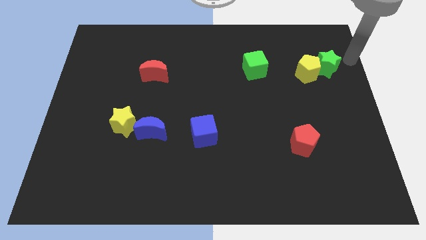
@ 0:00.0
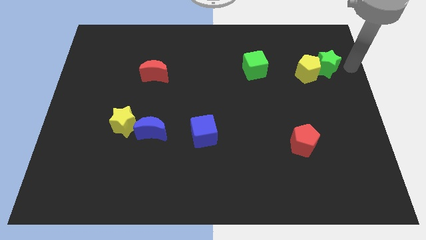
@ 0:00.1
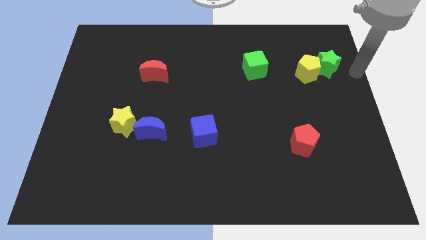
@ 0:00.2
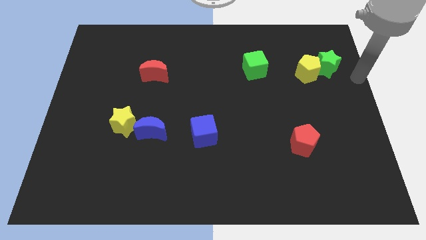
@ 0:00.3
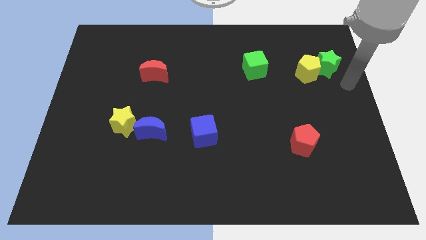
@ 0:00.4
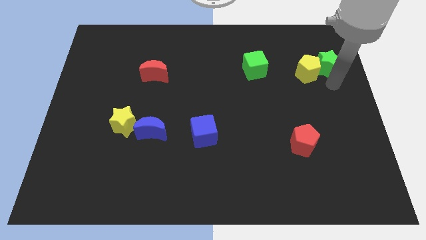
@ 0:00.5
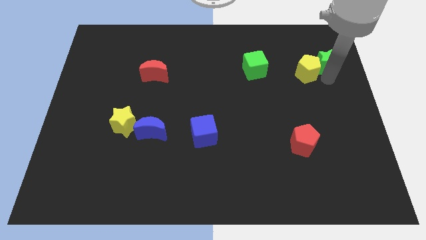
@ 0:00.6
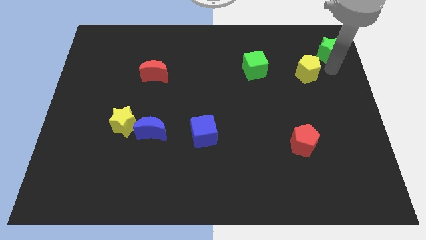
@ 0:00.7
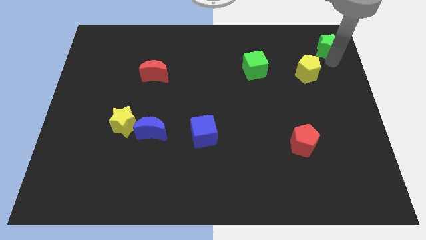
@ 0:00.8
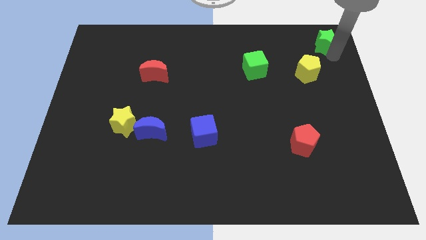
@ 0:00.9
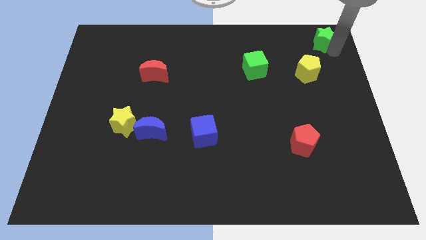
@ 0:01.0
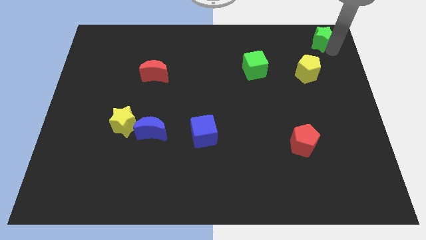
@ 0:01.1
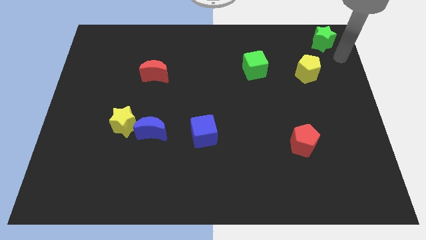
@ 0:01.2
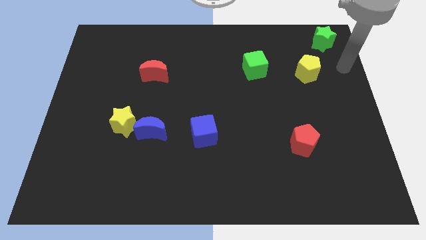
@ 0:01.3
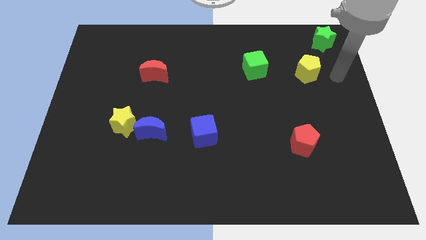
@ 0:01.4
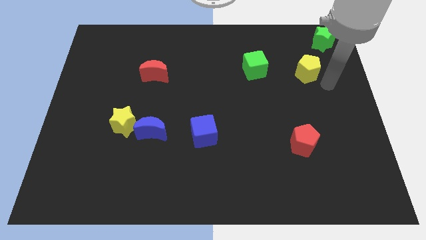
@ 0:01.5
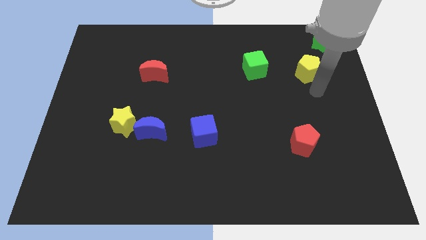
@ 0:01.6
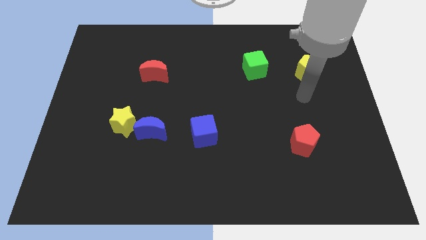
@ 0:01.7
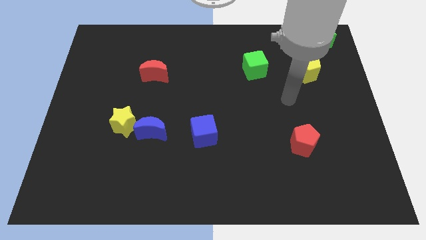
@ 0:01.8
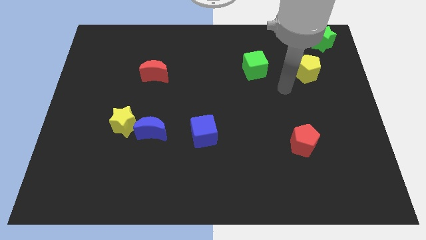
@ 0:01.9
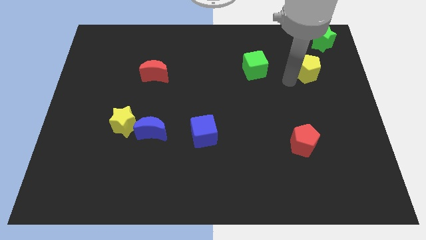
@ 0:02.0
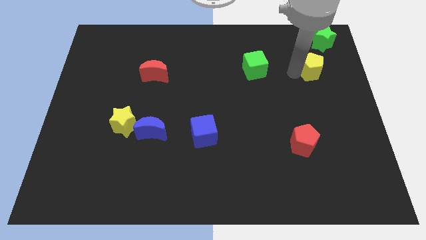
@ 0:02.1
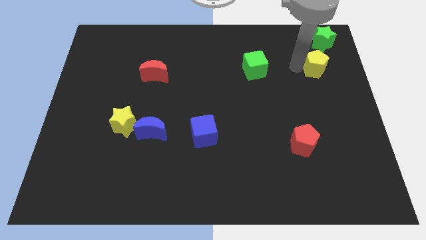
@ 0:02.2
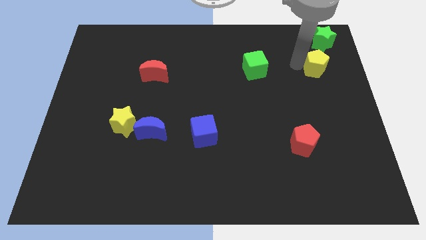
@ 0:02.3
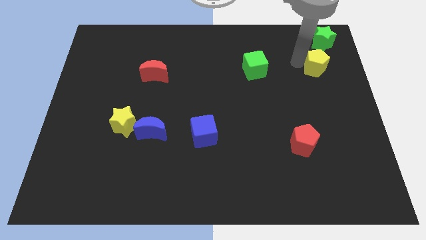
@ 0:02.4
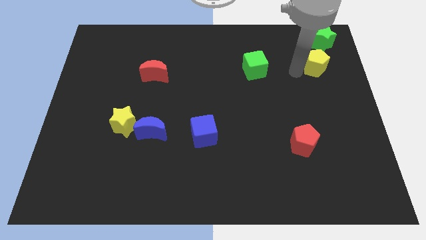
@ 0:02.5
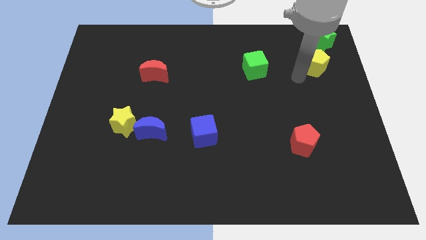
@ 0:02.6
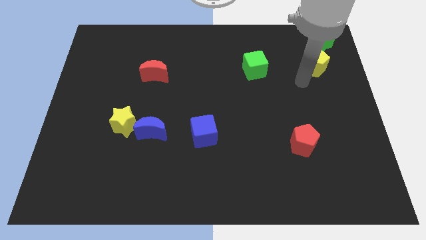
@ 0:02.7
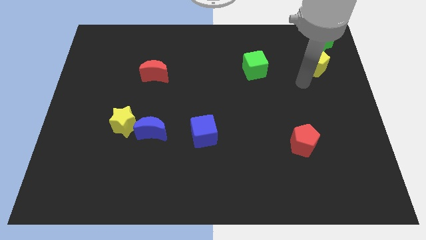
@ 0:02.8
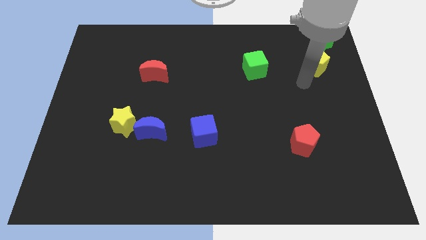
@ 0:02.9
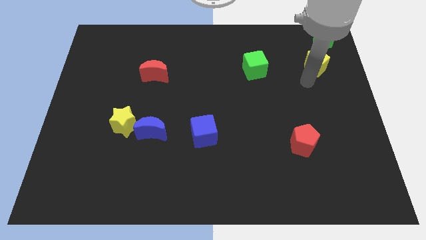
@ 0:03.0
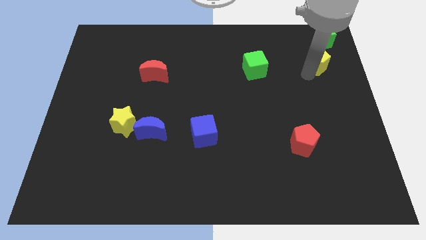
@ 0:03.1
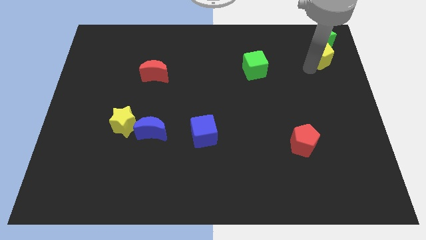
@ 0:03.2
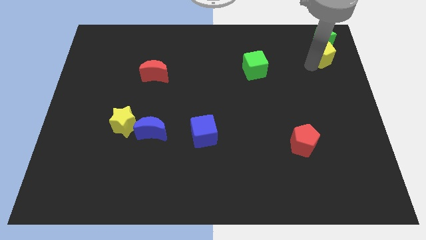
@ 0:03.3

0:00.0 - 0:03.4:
slightly move the green star to the top right corner of the board

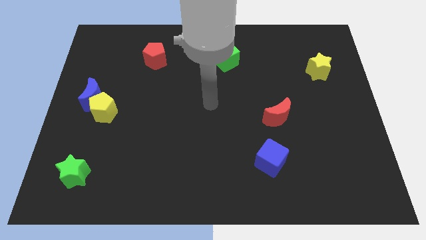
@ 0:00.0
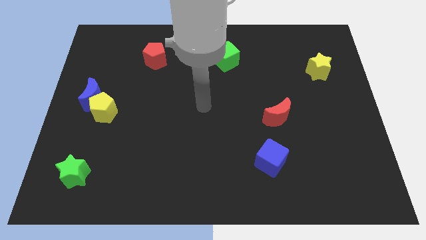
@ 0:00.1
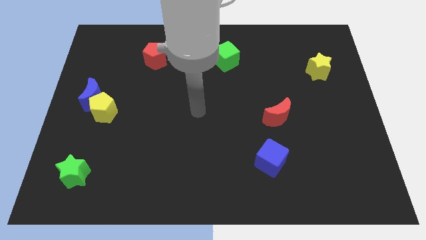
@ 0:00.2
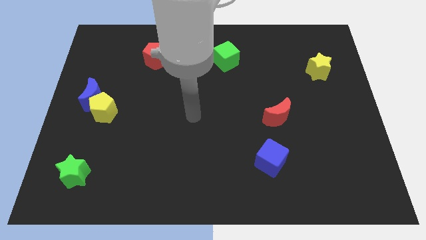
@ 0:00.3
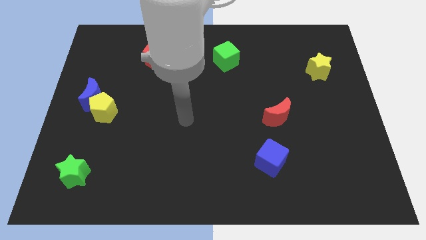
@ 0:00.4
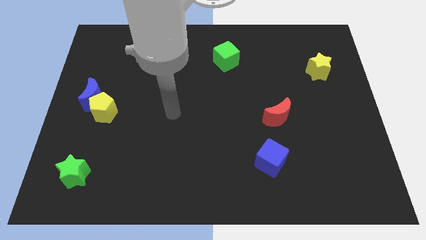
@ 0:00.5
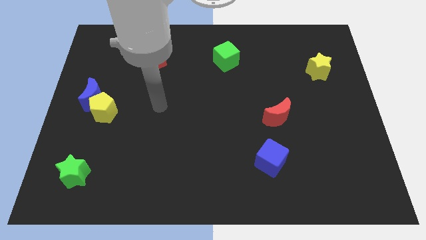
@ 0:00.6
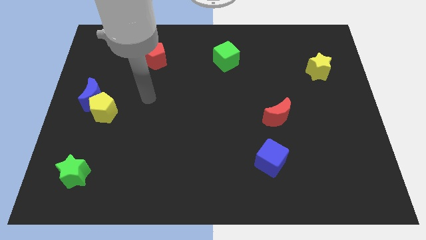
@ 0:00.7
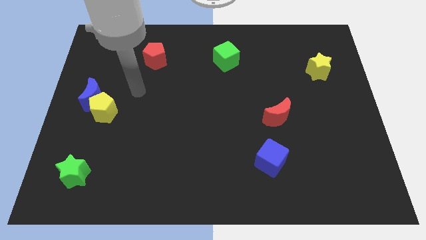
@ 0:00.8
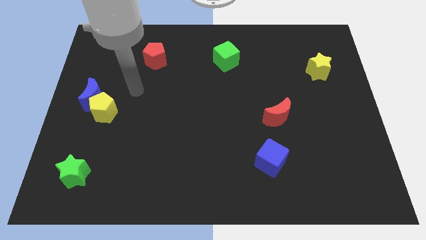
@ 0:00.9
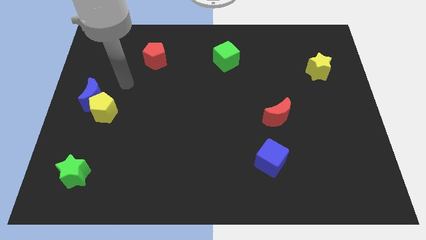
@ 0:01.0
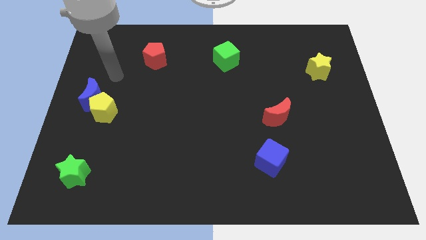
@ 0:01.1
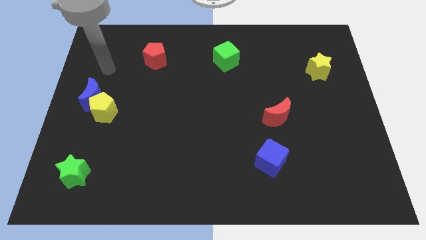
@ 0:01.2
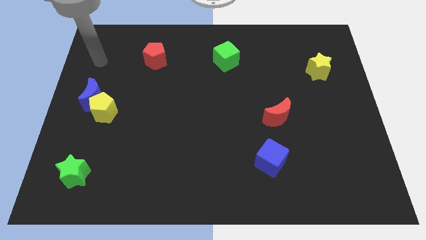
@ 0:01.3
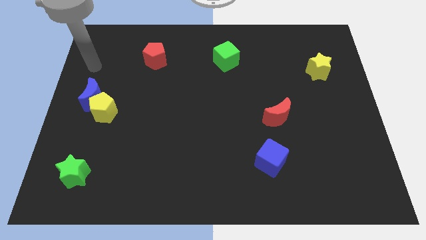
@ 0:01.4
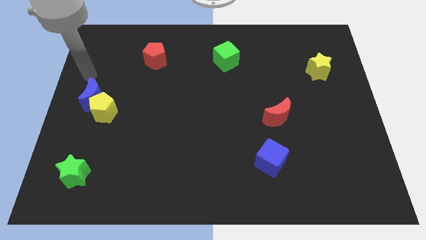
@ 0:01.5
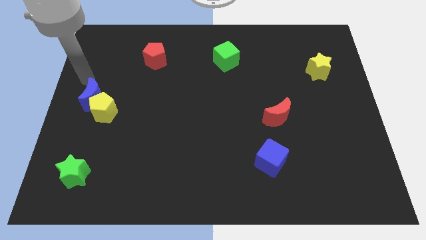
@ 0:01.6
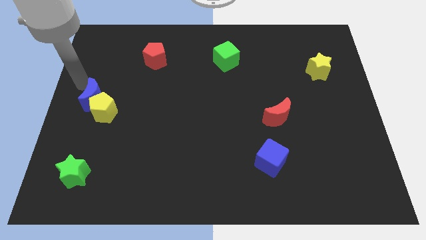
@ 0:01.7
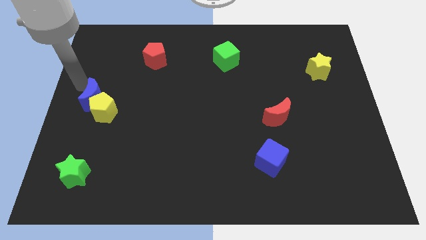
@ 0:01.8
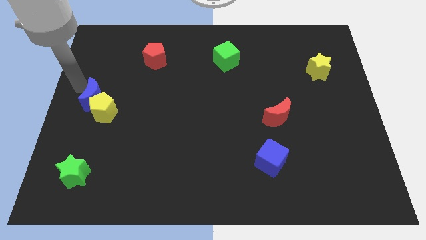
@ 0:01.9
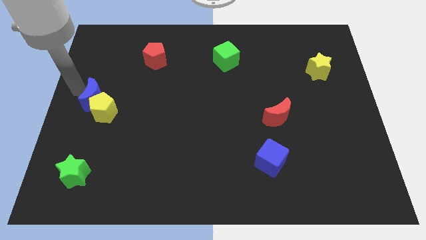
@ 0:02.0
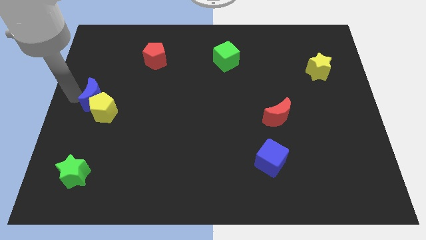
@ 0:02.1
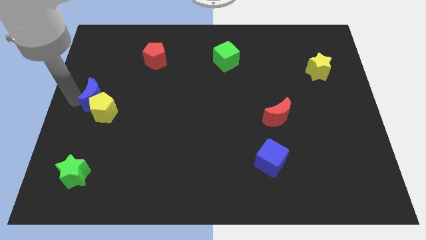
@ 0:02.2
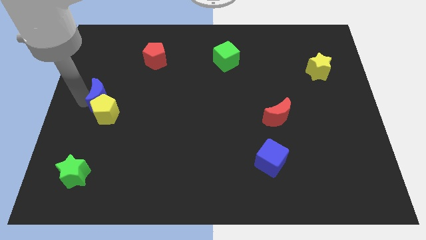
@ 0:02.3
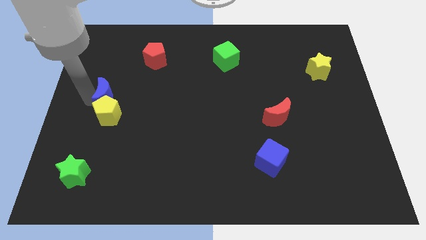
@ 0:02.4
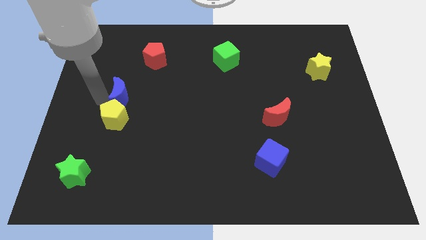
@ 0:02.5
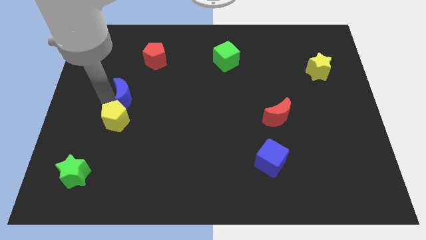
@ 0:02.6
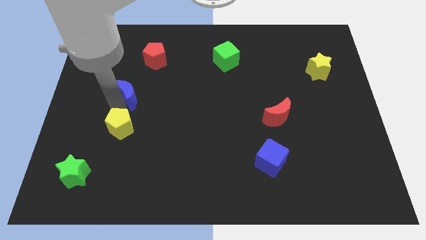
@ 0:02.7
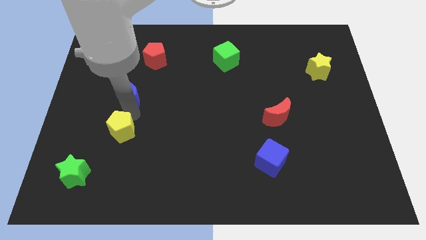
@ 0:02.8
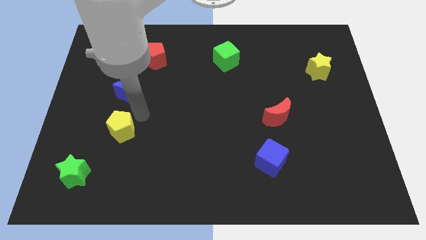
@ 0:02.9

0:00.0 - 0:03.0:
move the blue crescent to the top of the yellow pentagon

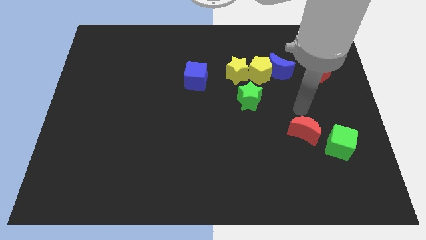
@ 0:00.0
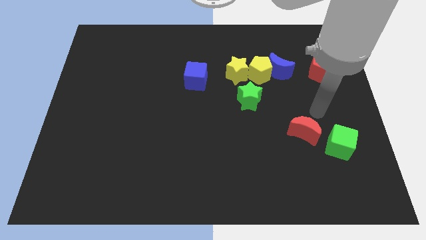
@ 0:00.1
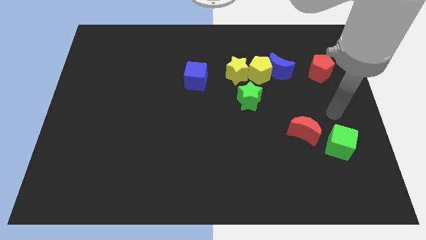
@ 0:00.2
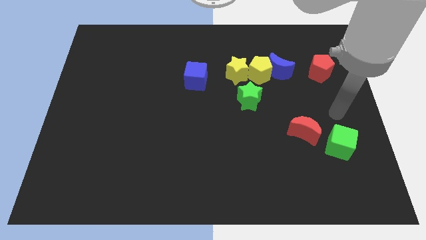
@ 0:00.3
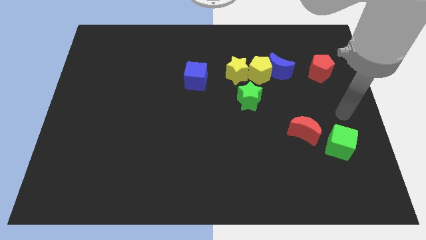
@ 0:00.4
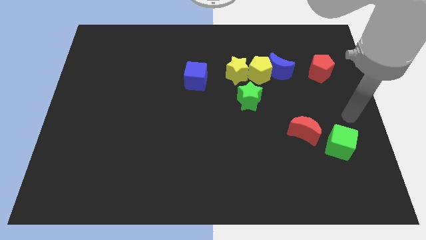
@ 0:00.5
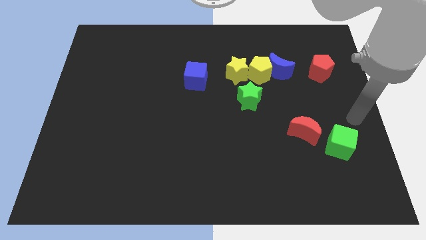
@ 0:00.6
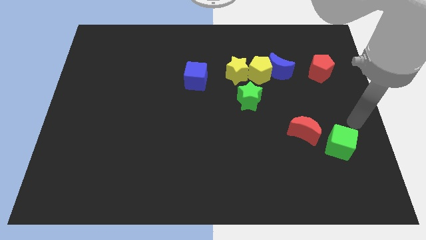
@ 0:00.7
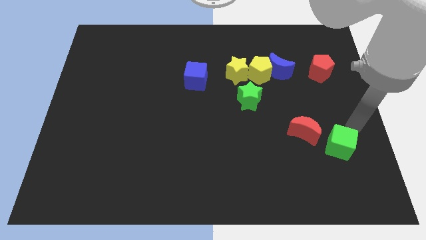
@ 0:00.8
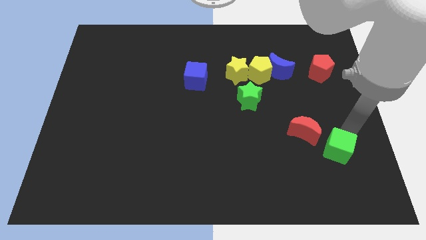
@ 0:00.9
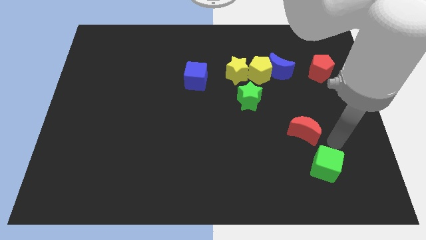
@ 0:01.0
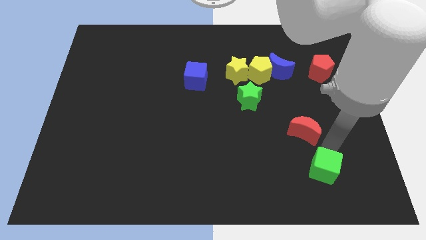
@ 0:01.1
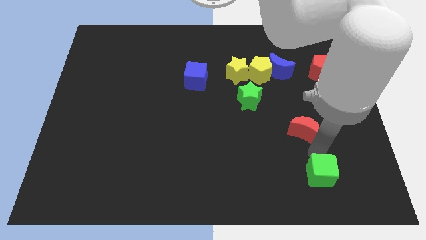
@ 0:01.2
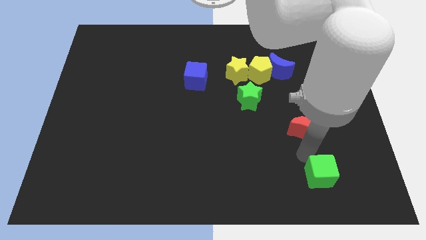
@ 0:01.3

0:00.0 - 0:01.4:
move the green cube below the red crescent

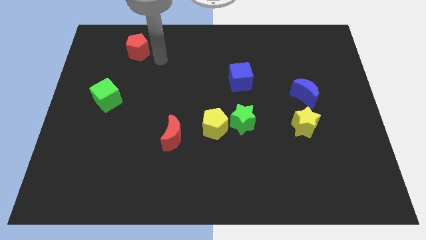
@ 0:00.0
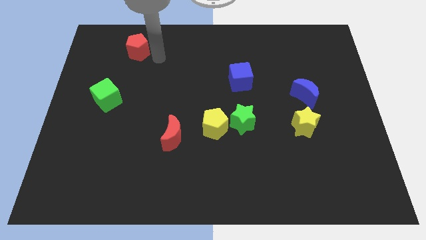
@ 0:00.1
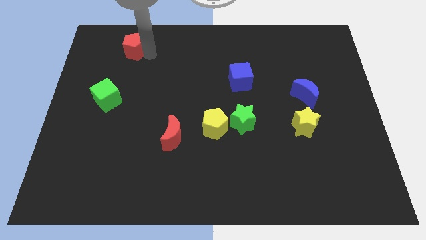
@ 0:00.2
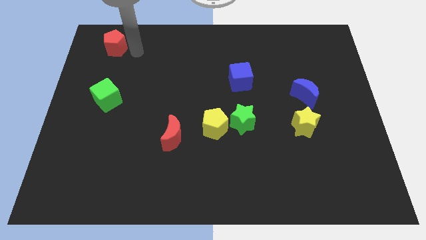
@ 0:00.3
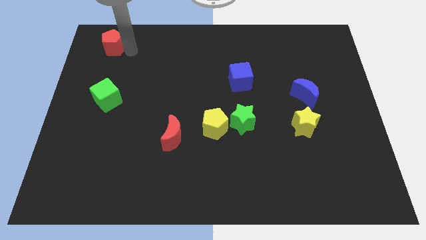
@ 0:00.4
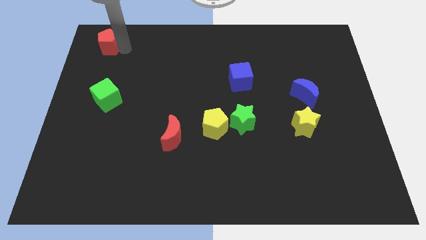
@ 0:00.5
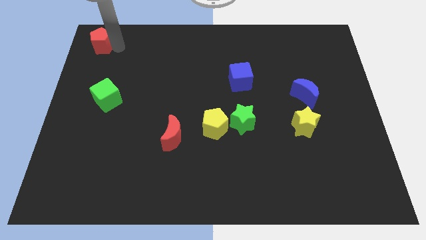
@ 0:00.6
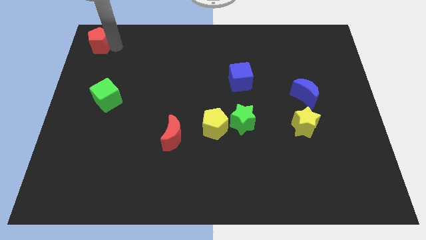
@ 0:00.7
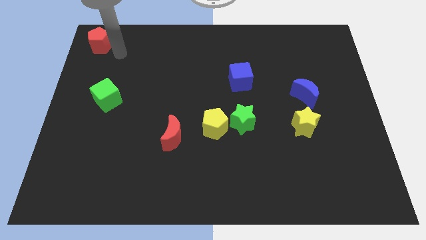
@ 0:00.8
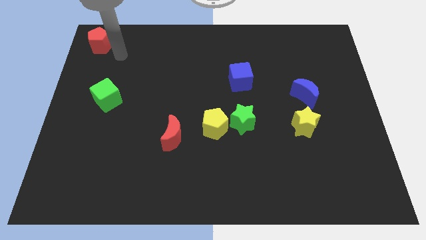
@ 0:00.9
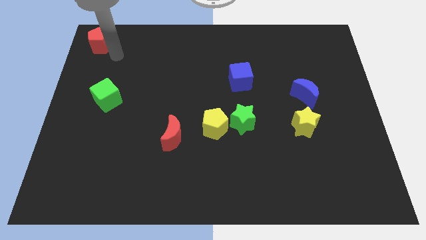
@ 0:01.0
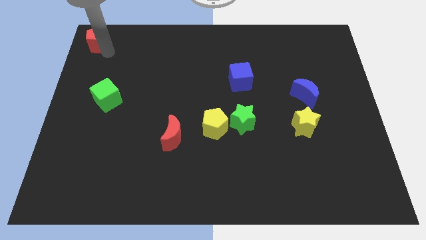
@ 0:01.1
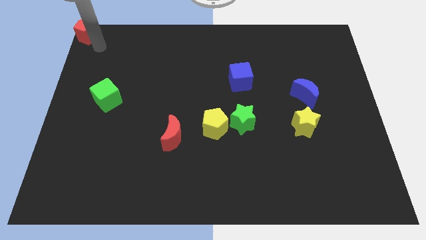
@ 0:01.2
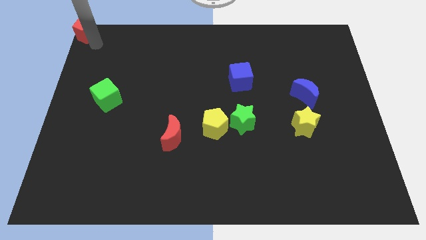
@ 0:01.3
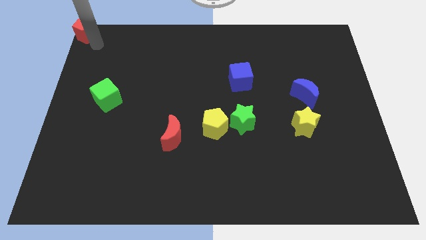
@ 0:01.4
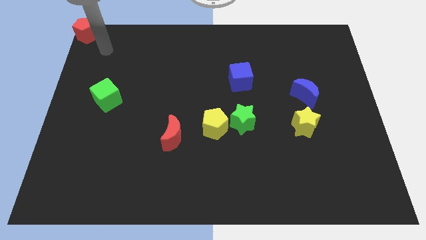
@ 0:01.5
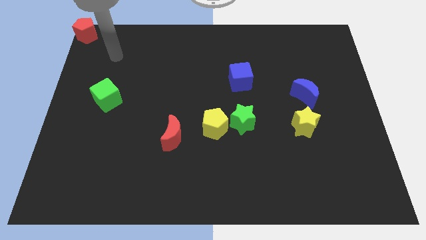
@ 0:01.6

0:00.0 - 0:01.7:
move the red pentagon to the top left corner of the board
